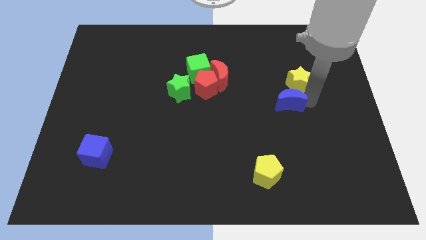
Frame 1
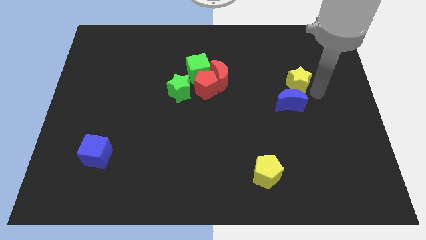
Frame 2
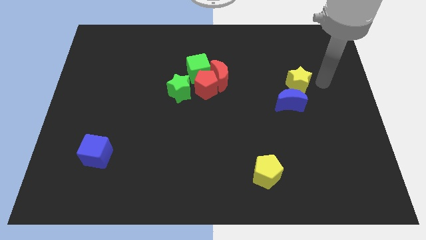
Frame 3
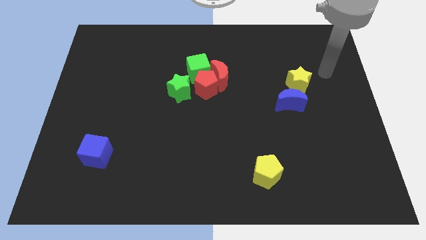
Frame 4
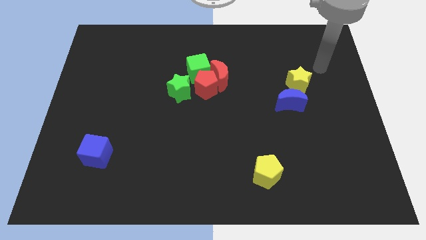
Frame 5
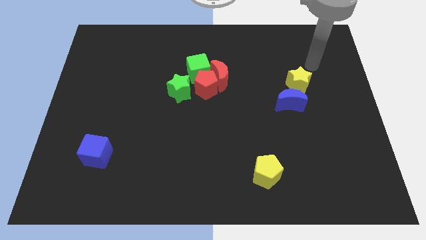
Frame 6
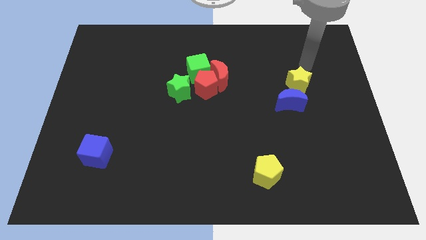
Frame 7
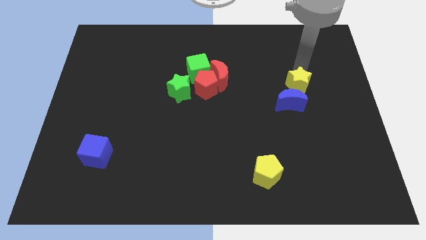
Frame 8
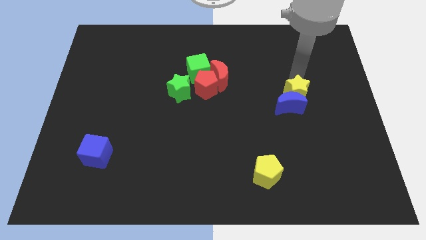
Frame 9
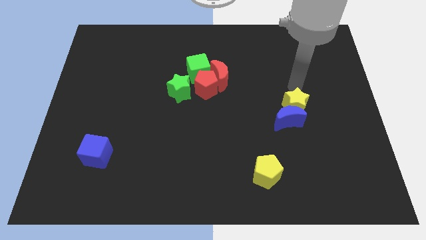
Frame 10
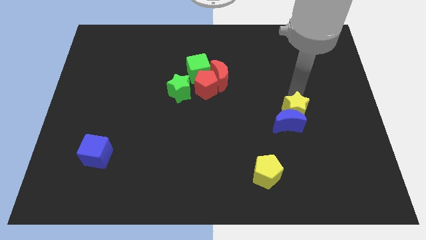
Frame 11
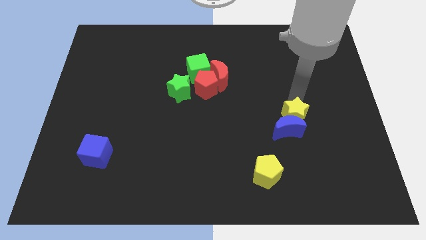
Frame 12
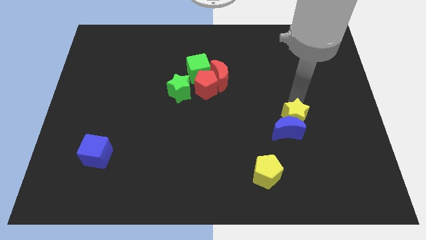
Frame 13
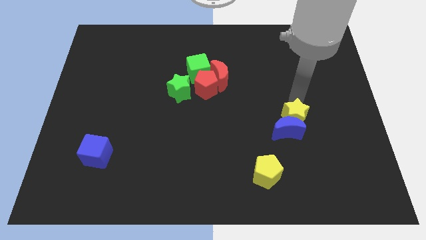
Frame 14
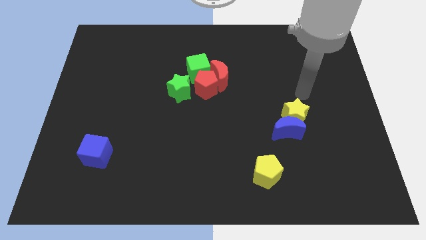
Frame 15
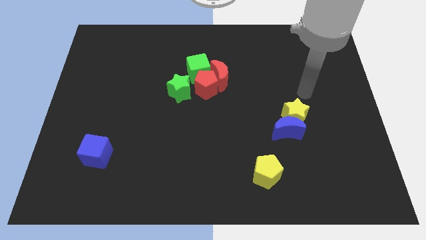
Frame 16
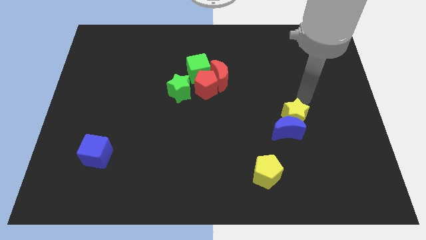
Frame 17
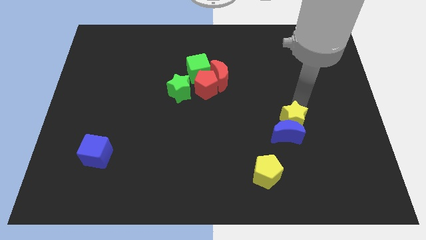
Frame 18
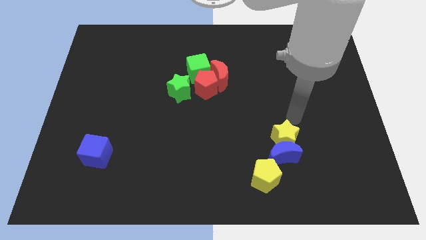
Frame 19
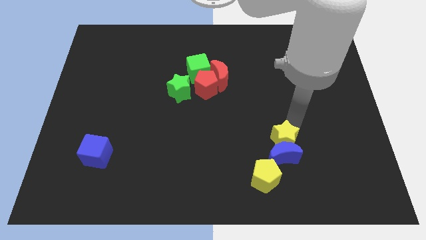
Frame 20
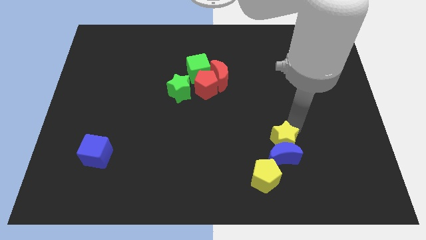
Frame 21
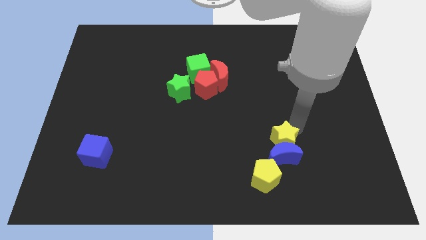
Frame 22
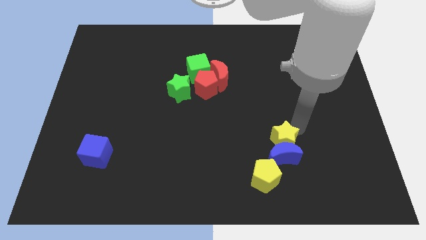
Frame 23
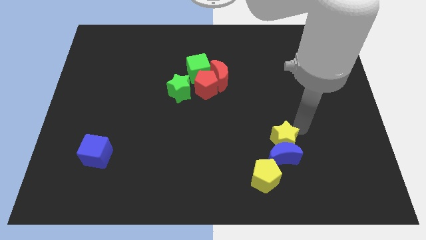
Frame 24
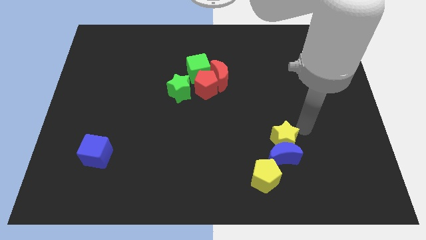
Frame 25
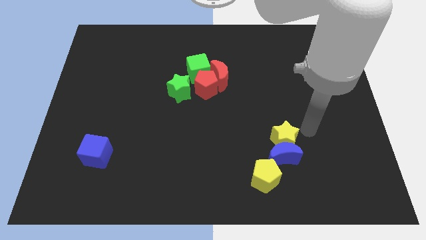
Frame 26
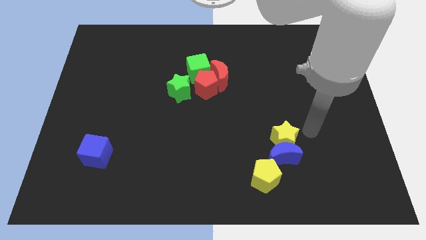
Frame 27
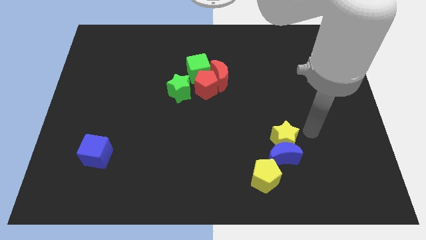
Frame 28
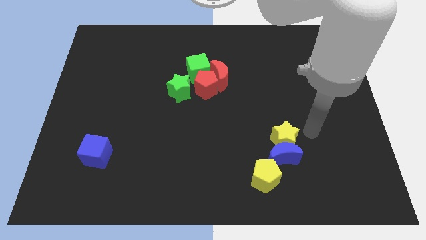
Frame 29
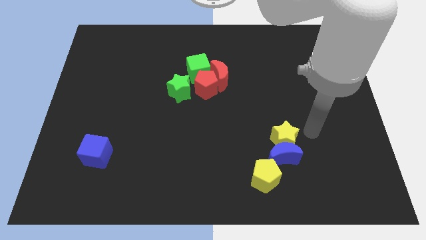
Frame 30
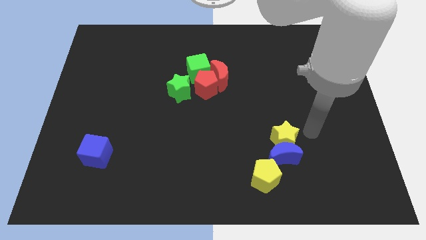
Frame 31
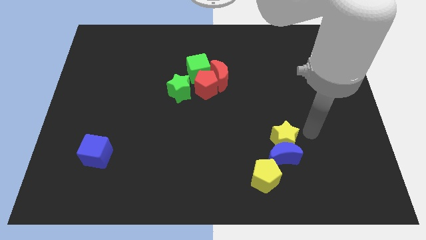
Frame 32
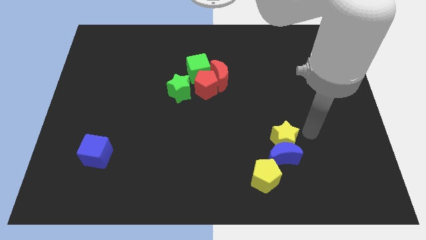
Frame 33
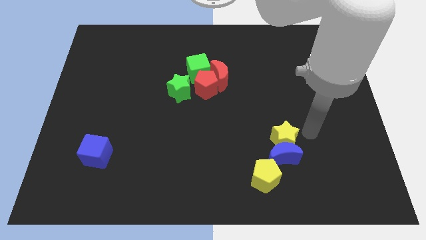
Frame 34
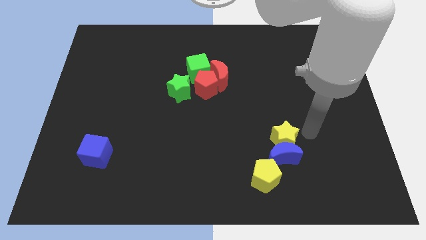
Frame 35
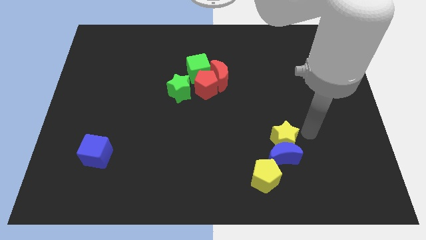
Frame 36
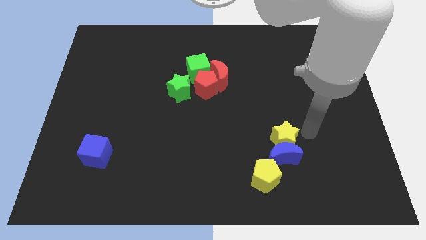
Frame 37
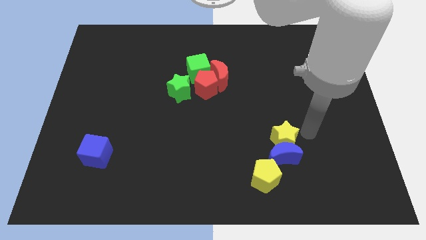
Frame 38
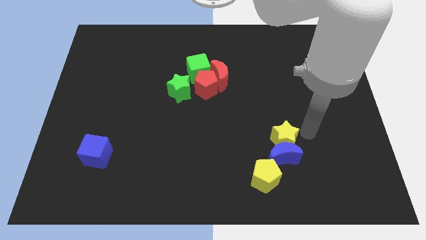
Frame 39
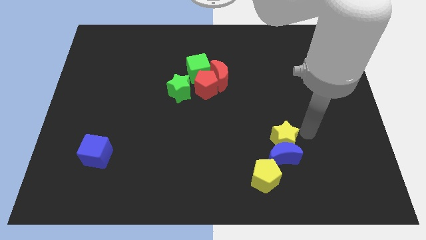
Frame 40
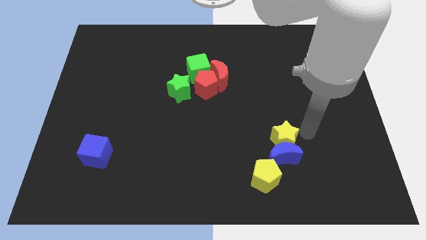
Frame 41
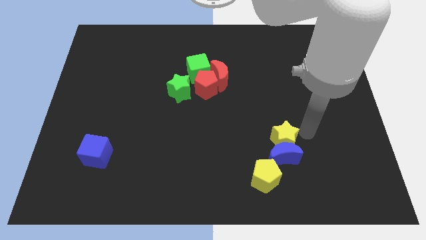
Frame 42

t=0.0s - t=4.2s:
move the blue crescent and yellow star above the yellow pentagon

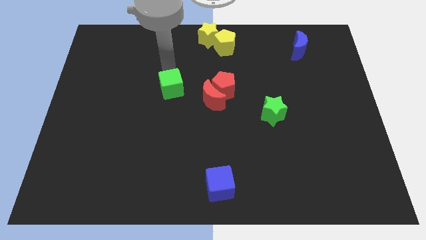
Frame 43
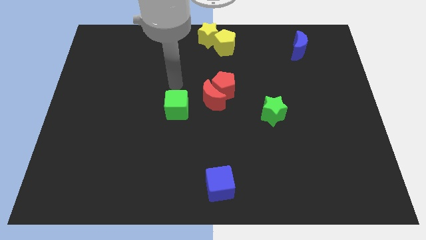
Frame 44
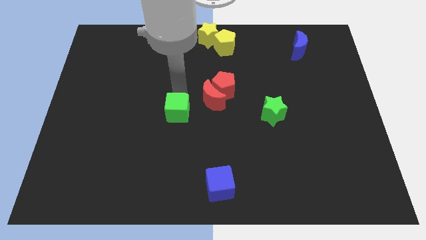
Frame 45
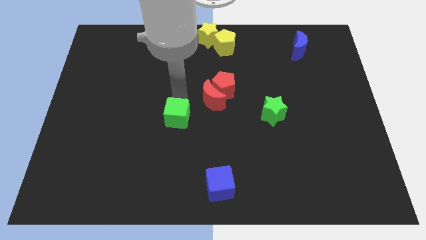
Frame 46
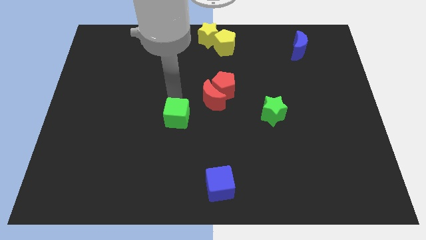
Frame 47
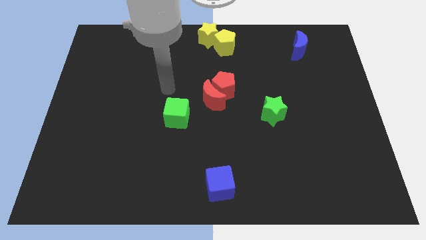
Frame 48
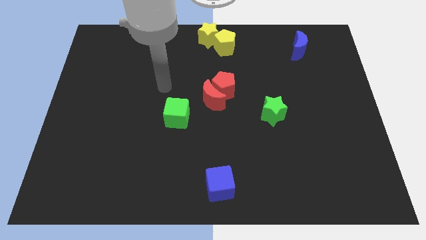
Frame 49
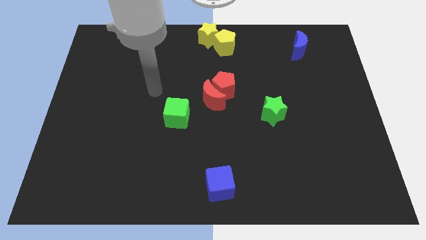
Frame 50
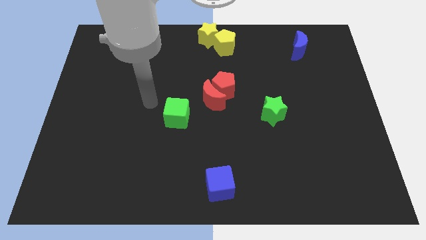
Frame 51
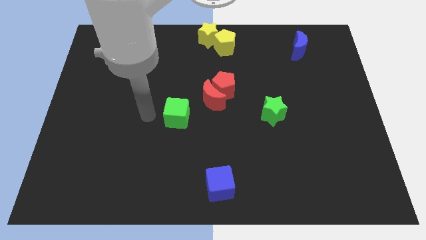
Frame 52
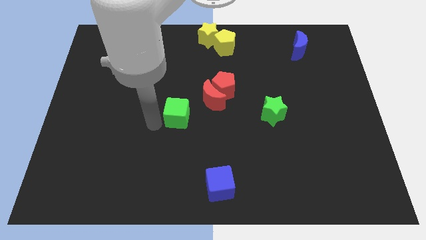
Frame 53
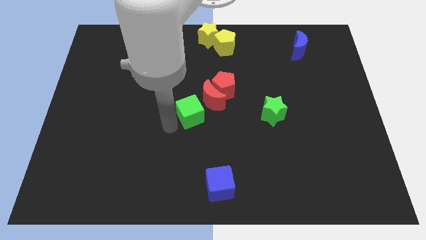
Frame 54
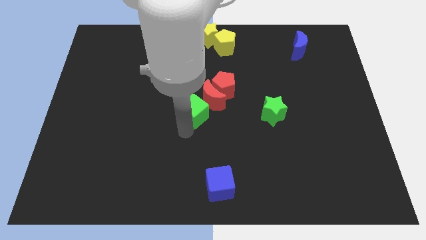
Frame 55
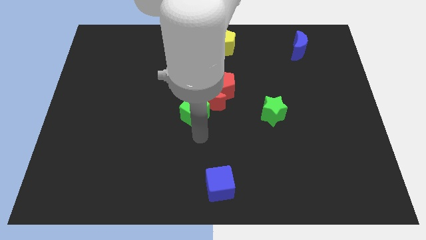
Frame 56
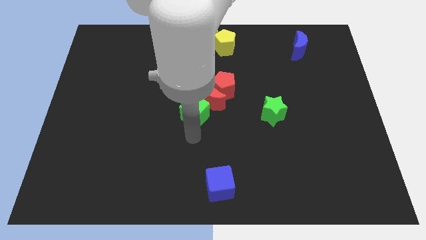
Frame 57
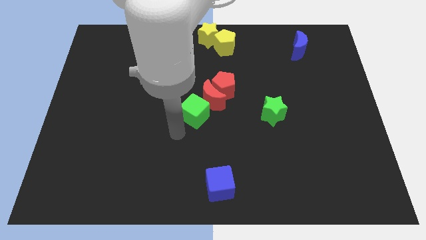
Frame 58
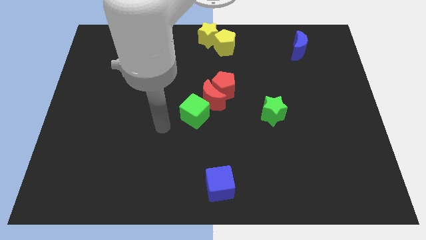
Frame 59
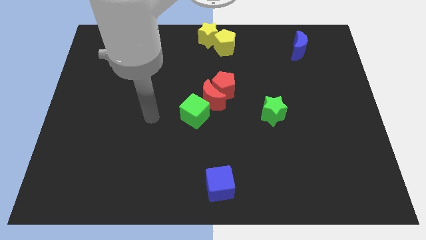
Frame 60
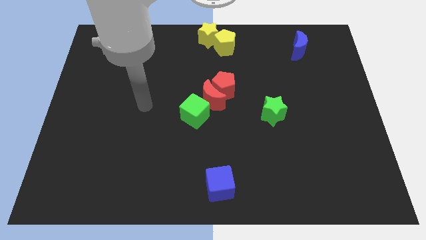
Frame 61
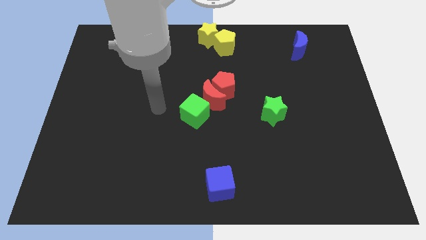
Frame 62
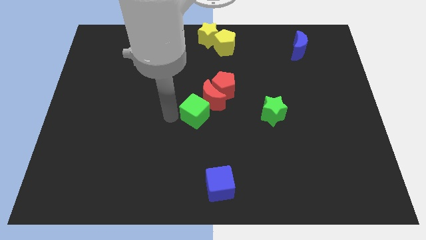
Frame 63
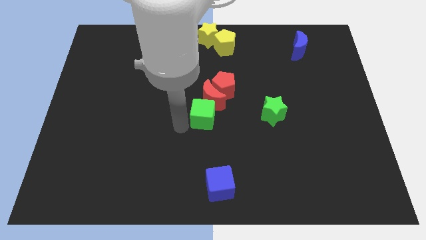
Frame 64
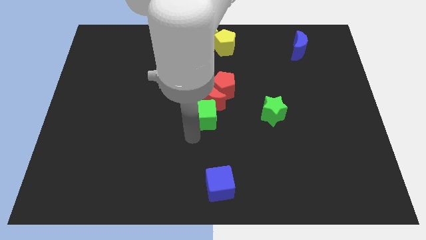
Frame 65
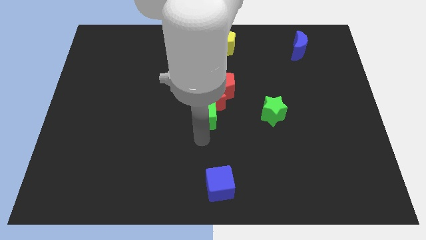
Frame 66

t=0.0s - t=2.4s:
place the green cube below the red crescent

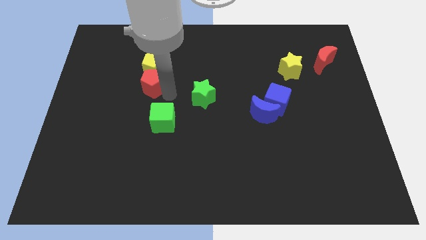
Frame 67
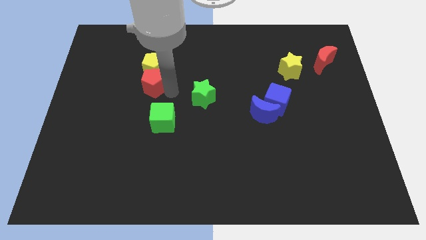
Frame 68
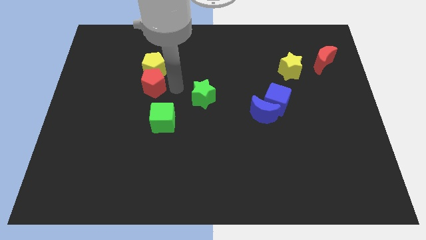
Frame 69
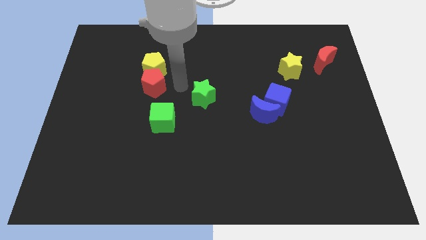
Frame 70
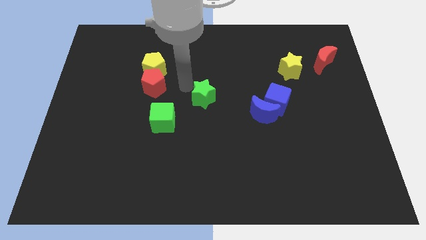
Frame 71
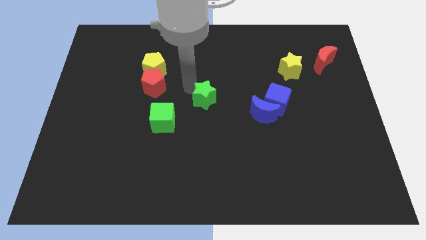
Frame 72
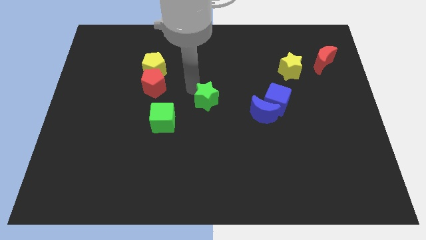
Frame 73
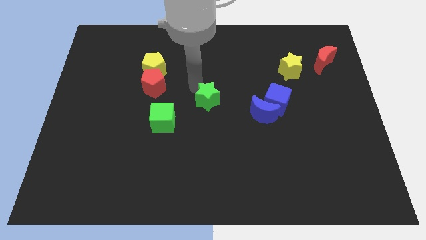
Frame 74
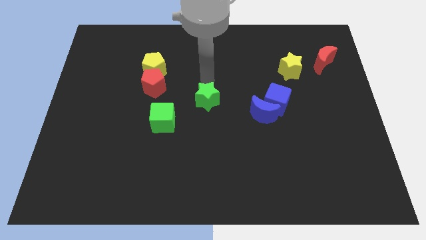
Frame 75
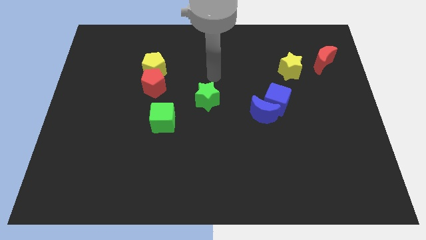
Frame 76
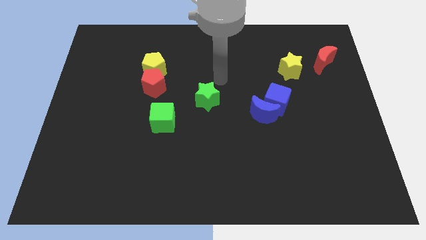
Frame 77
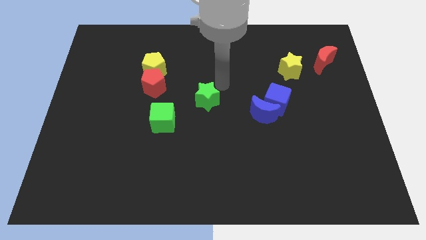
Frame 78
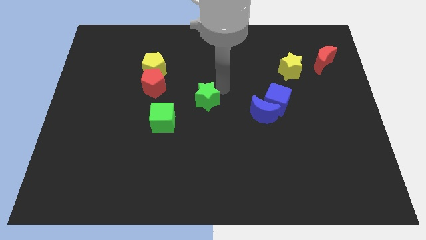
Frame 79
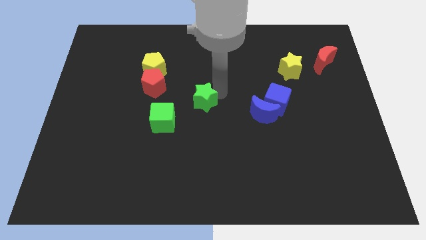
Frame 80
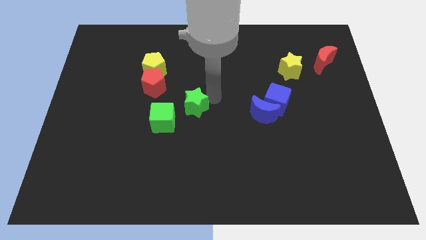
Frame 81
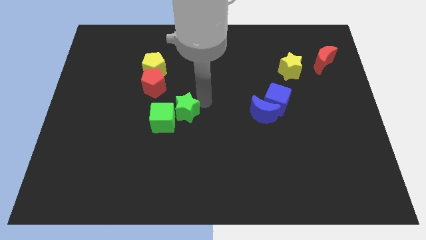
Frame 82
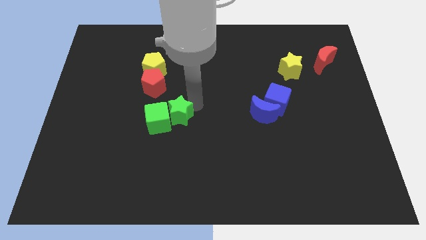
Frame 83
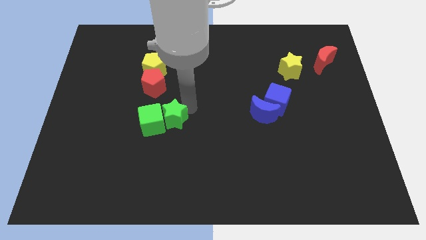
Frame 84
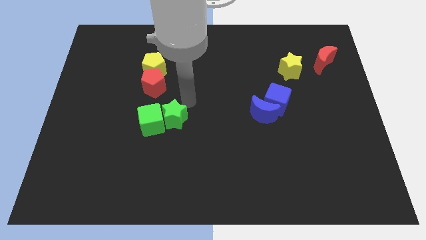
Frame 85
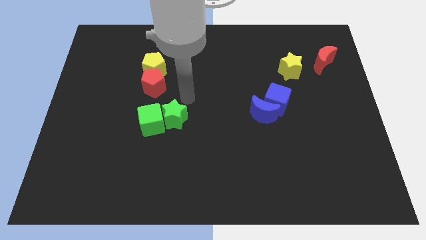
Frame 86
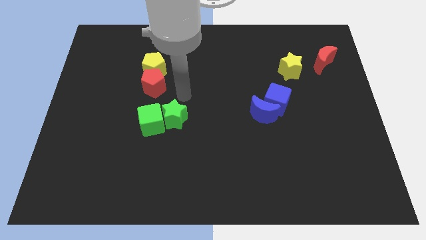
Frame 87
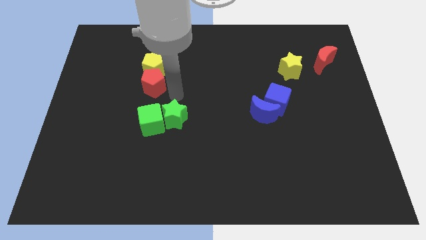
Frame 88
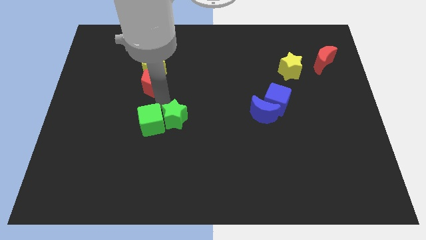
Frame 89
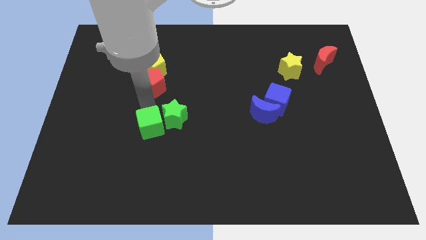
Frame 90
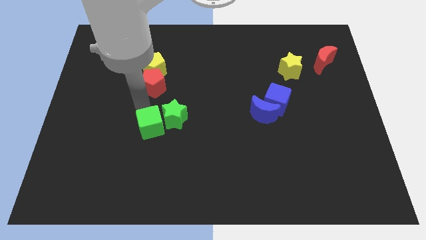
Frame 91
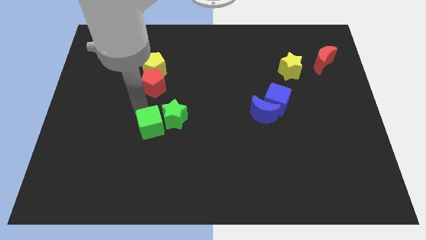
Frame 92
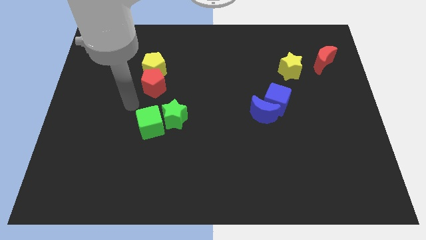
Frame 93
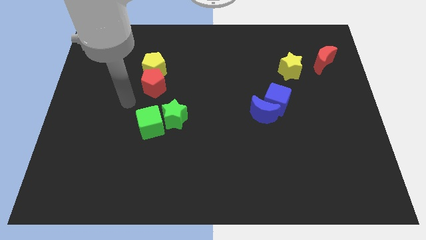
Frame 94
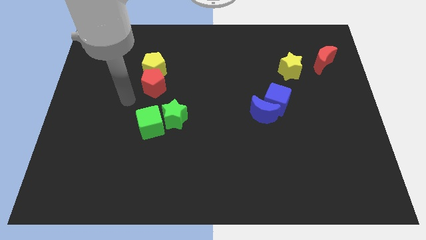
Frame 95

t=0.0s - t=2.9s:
push the green star into the green cube
